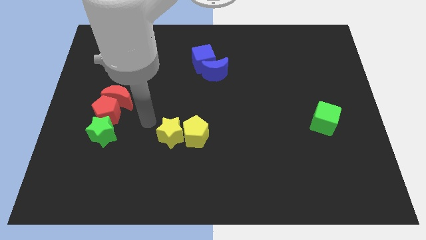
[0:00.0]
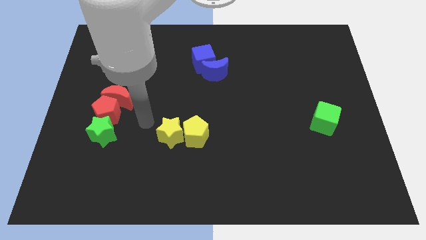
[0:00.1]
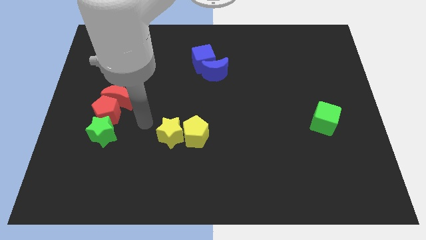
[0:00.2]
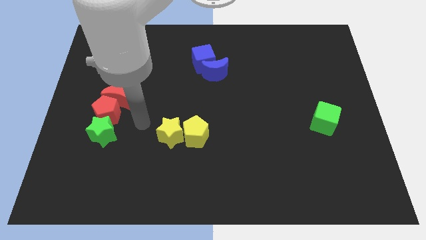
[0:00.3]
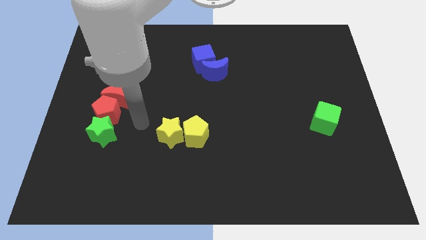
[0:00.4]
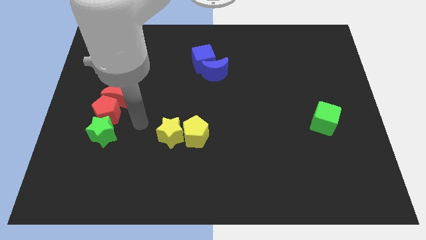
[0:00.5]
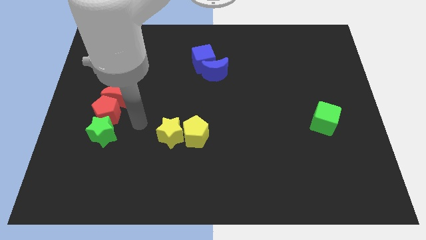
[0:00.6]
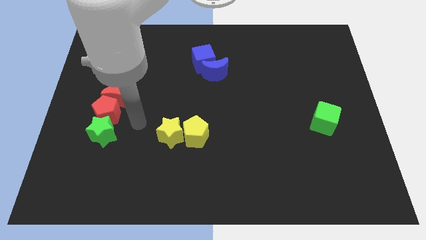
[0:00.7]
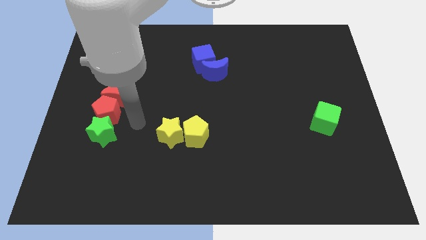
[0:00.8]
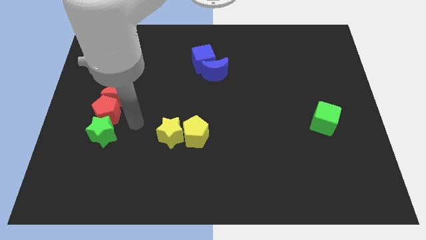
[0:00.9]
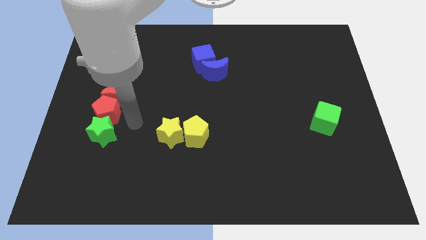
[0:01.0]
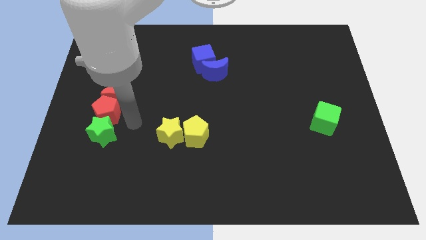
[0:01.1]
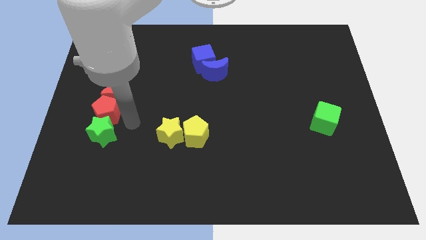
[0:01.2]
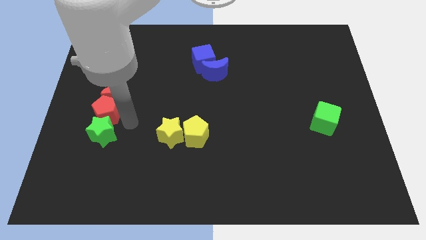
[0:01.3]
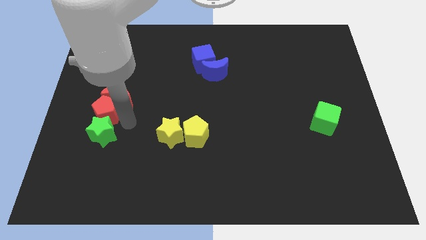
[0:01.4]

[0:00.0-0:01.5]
move your hand close to the right side of the red pentagon

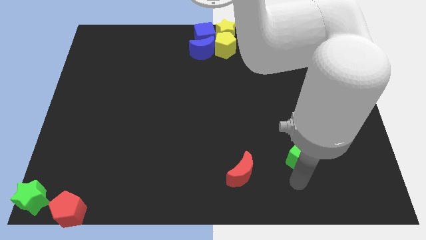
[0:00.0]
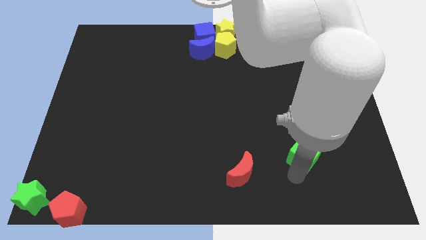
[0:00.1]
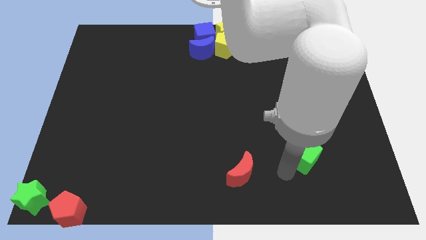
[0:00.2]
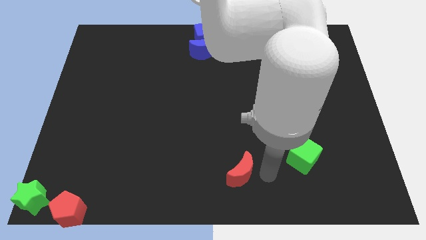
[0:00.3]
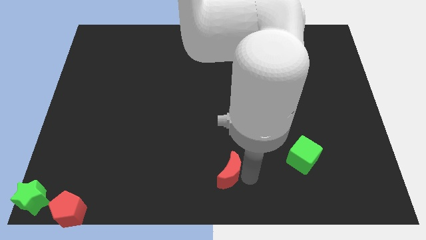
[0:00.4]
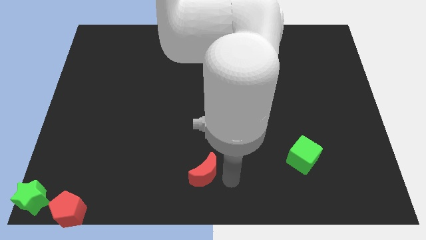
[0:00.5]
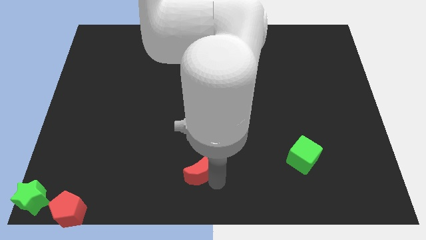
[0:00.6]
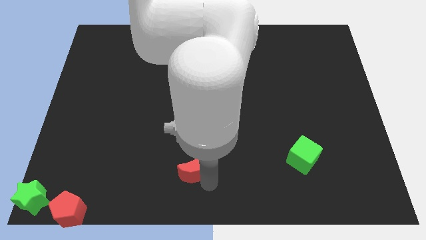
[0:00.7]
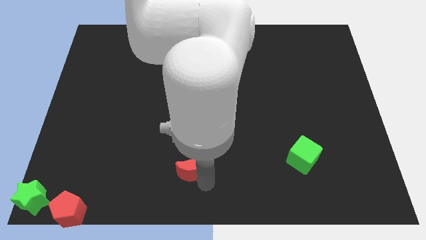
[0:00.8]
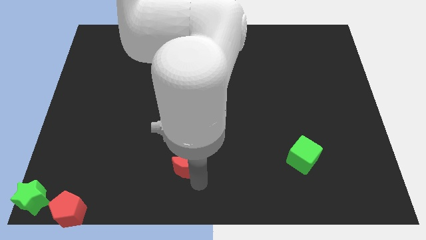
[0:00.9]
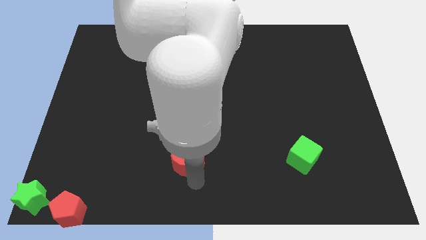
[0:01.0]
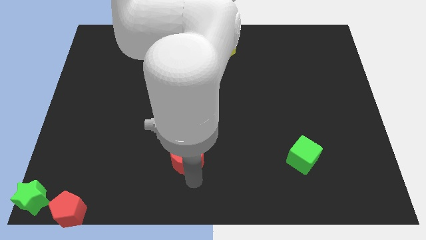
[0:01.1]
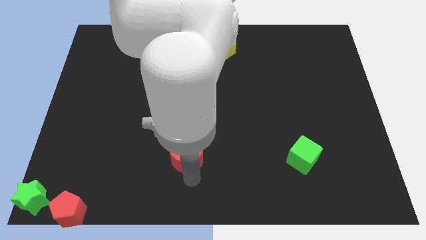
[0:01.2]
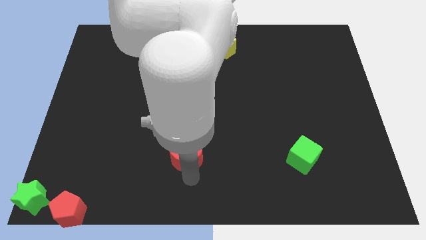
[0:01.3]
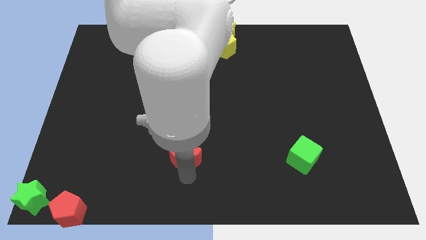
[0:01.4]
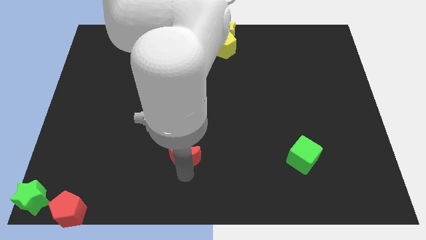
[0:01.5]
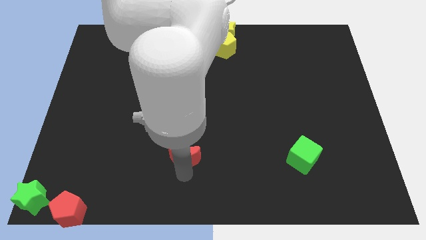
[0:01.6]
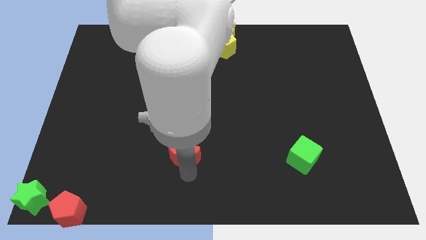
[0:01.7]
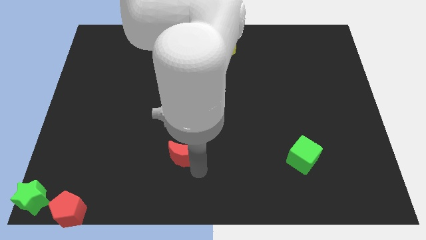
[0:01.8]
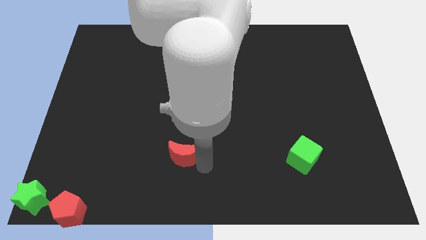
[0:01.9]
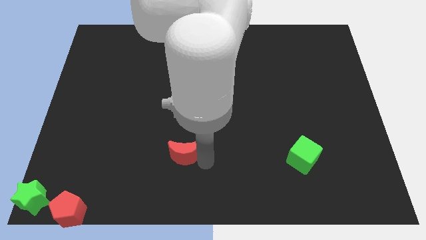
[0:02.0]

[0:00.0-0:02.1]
move the red moon towards up

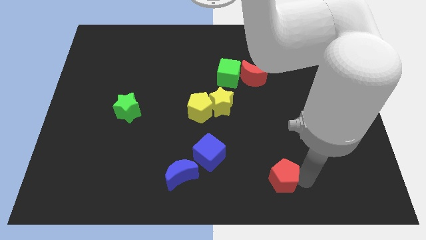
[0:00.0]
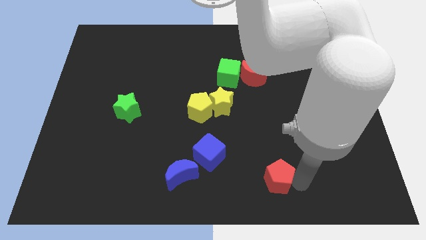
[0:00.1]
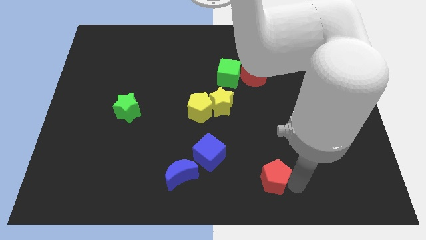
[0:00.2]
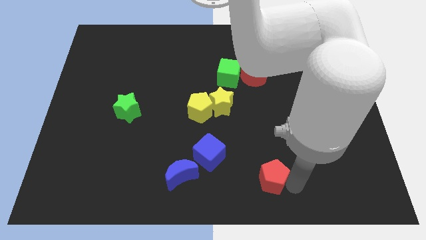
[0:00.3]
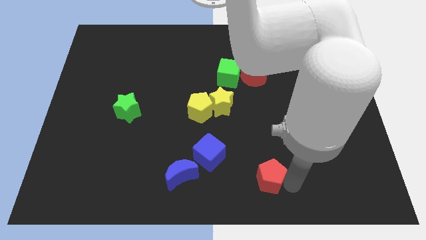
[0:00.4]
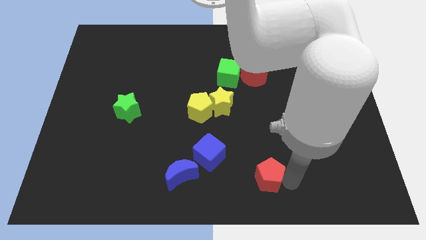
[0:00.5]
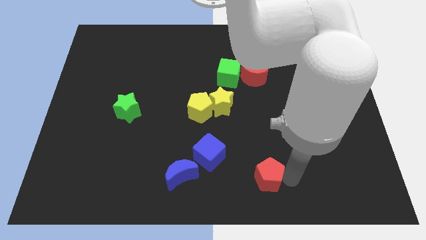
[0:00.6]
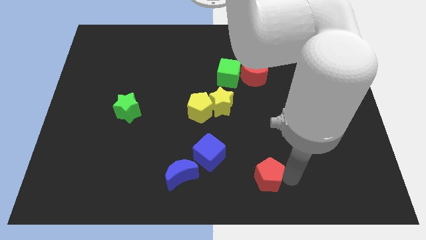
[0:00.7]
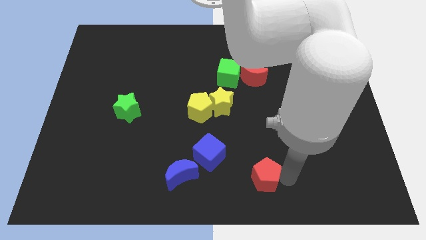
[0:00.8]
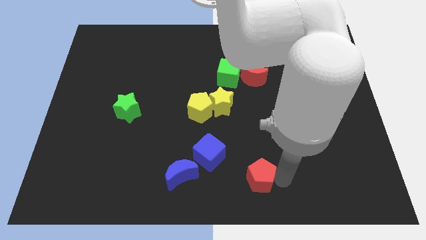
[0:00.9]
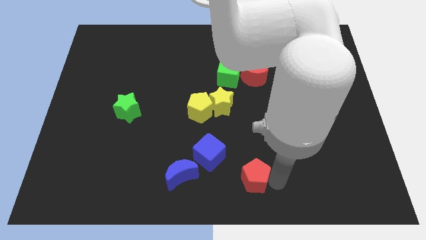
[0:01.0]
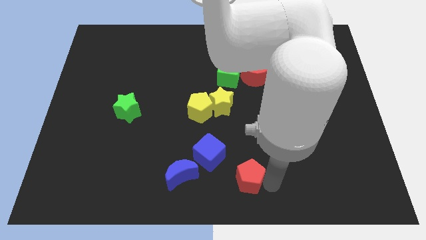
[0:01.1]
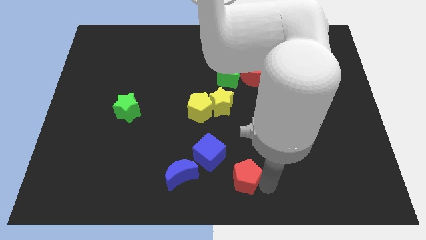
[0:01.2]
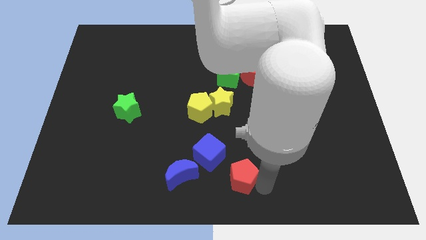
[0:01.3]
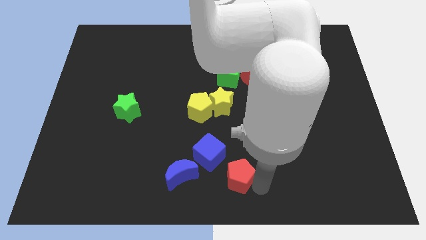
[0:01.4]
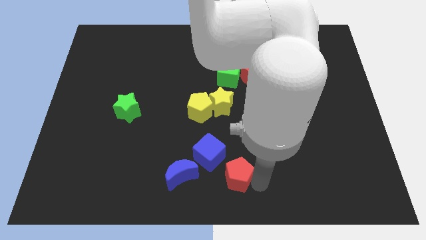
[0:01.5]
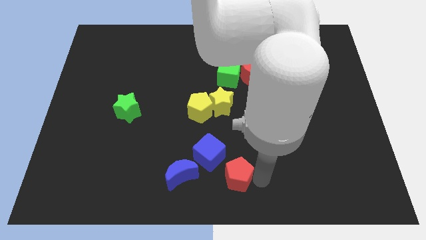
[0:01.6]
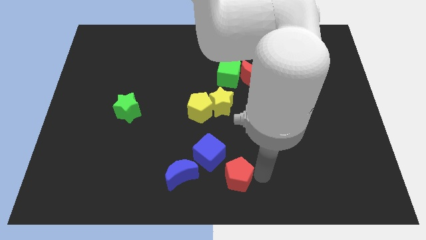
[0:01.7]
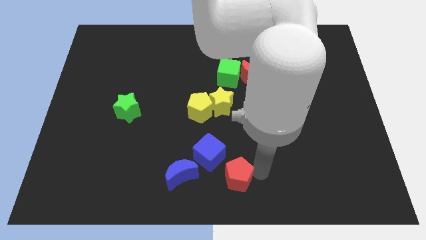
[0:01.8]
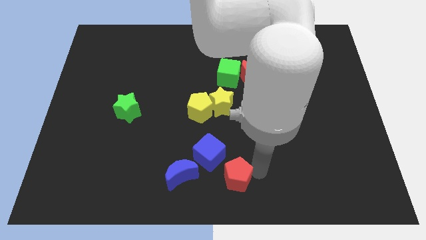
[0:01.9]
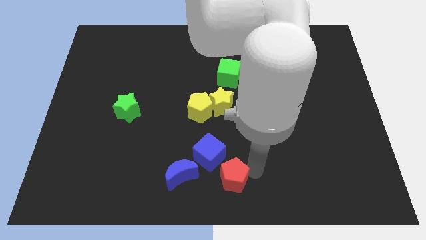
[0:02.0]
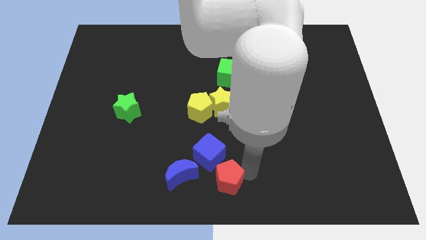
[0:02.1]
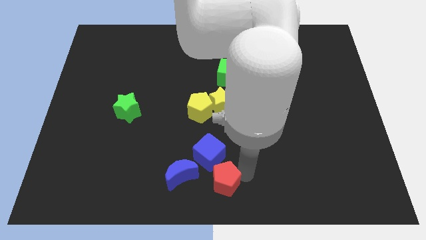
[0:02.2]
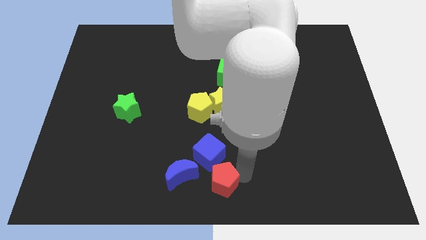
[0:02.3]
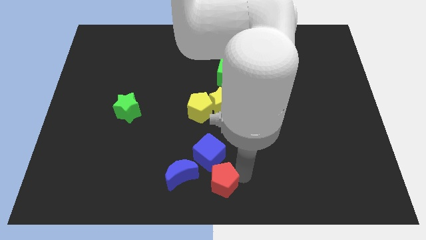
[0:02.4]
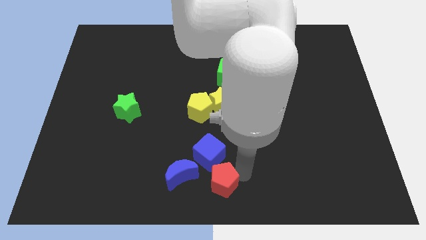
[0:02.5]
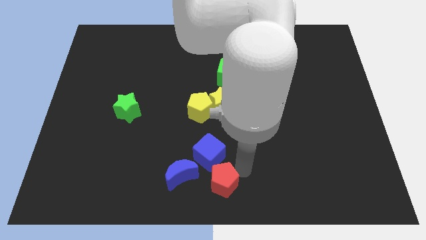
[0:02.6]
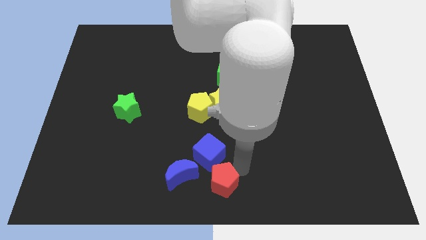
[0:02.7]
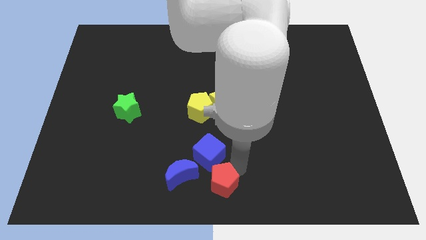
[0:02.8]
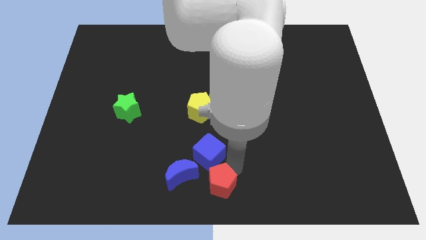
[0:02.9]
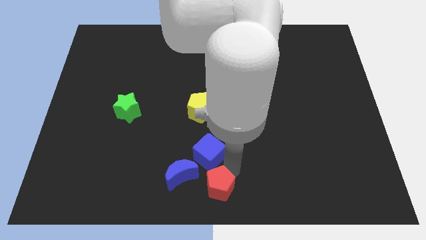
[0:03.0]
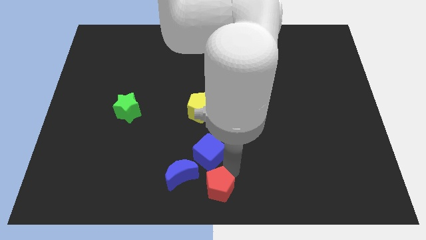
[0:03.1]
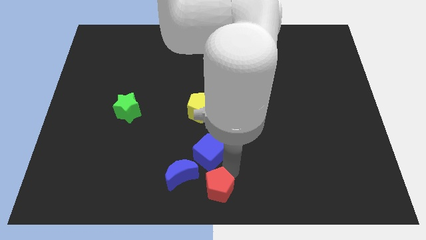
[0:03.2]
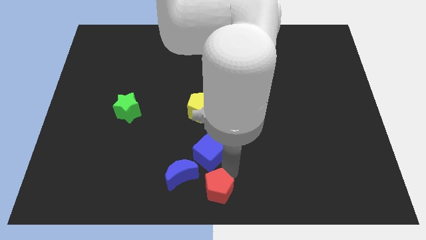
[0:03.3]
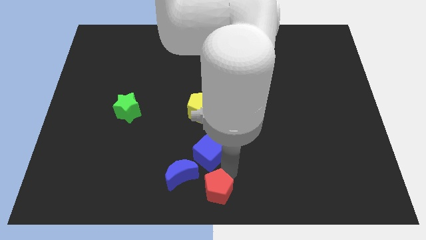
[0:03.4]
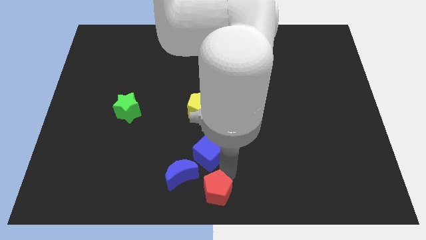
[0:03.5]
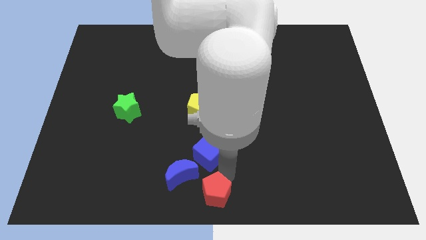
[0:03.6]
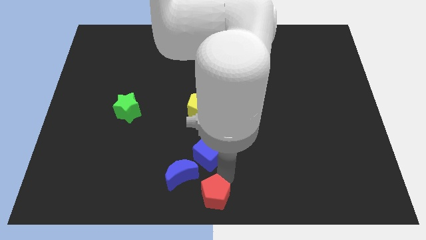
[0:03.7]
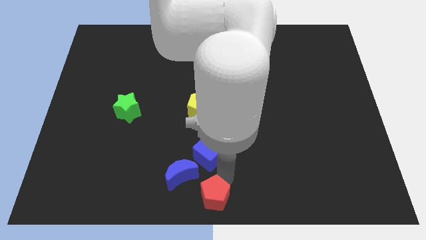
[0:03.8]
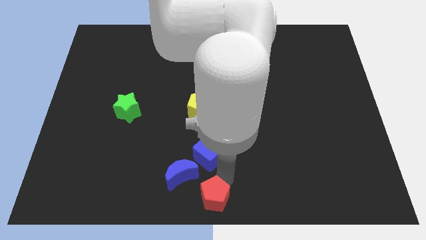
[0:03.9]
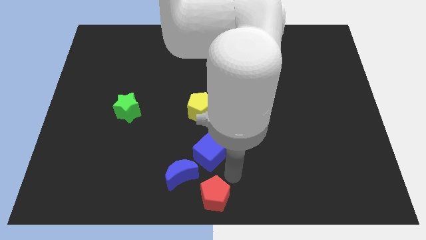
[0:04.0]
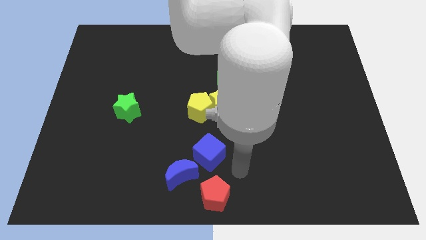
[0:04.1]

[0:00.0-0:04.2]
move the red pentagon to the bottom center of the board

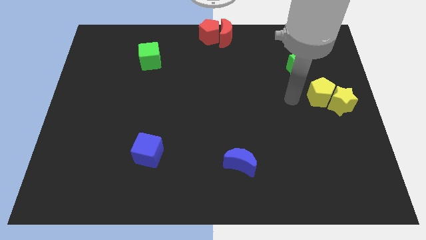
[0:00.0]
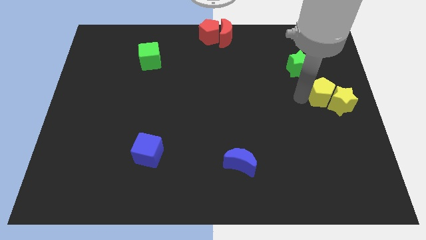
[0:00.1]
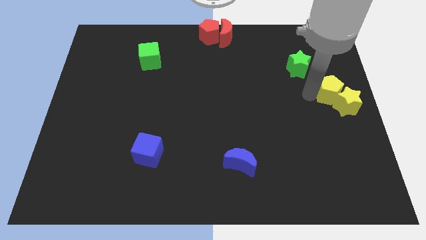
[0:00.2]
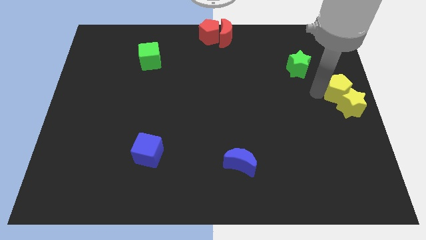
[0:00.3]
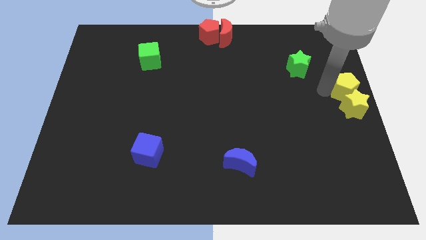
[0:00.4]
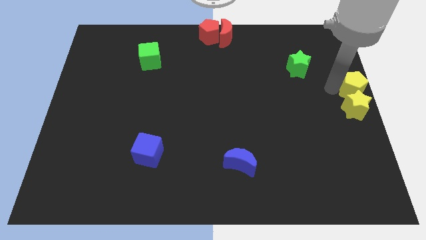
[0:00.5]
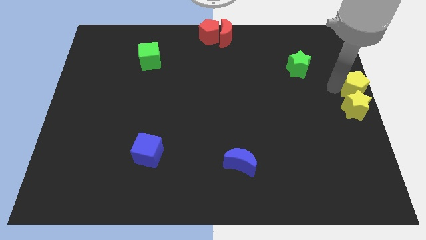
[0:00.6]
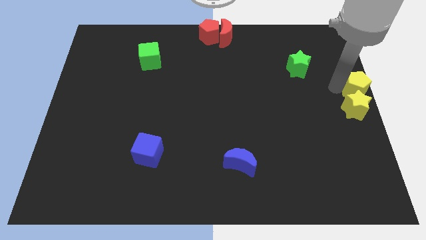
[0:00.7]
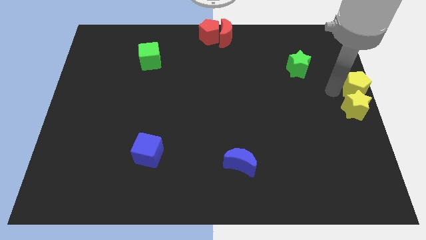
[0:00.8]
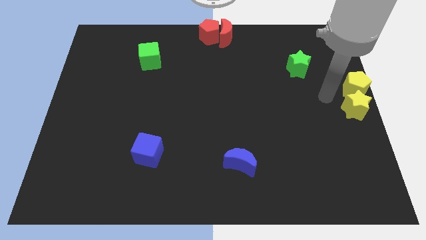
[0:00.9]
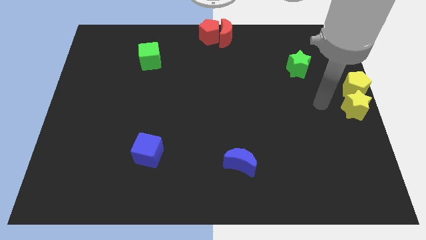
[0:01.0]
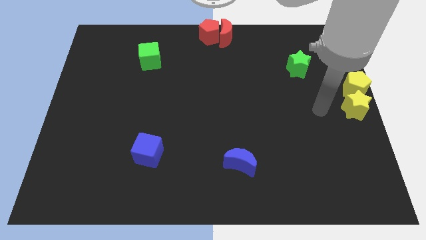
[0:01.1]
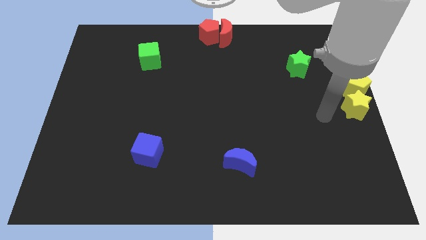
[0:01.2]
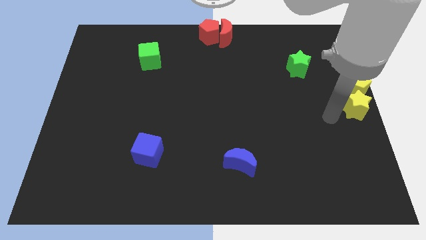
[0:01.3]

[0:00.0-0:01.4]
place the yellow pentagon above the yellow star
